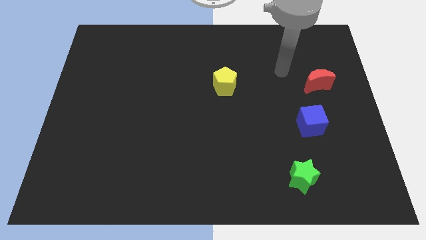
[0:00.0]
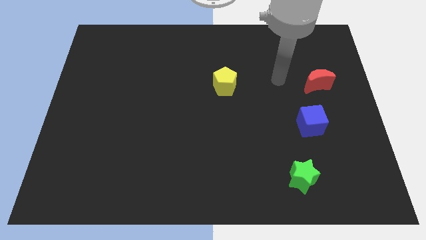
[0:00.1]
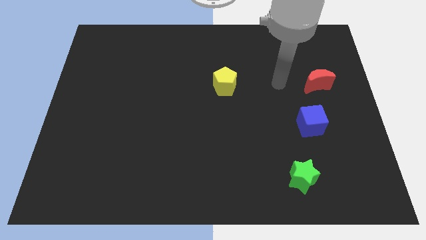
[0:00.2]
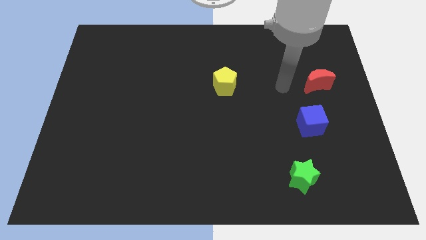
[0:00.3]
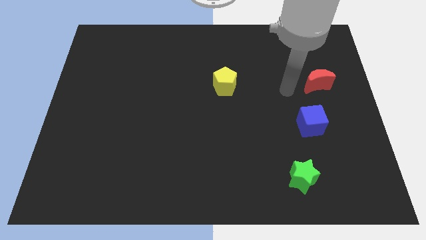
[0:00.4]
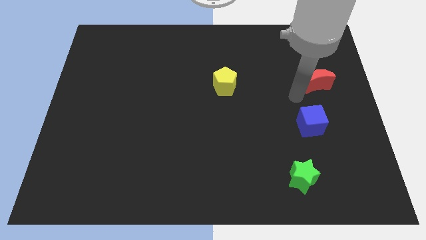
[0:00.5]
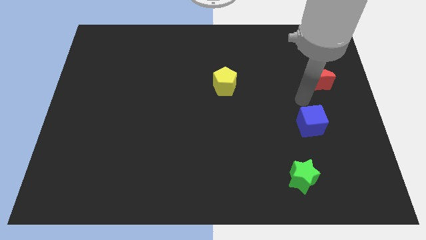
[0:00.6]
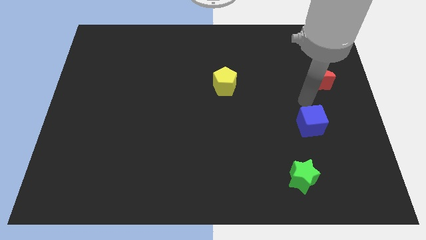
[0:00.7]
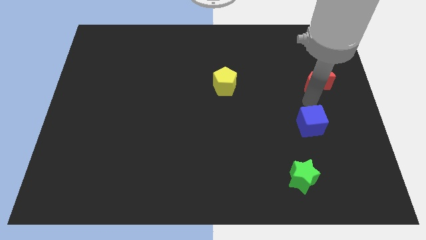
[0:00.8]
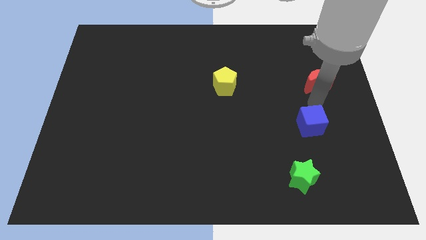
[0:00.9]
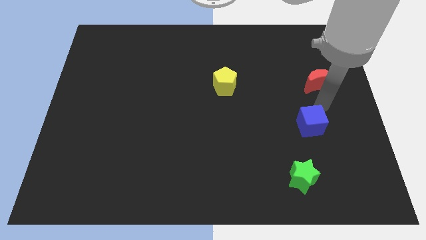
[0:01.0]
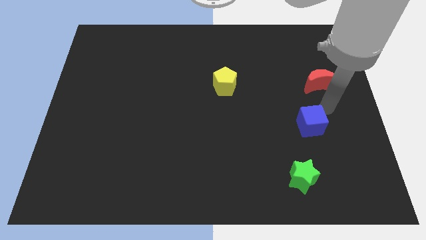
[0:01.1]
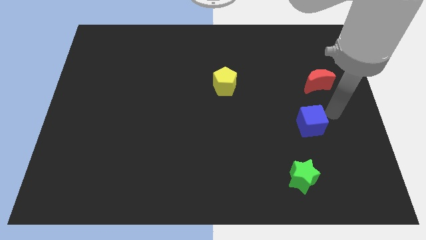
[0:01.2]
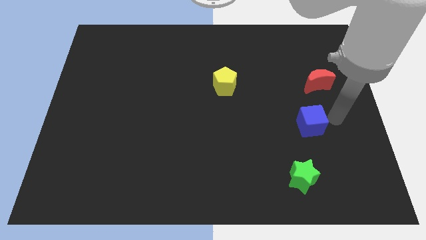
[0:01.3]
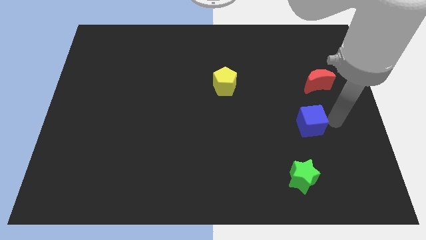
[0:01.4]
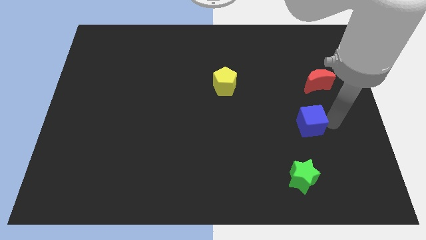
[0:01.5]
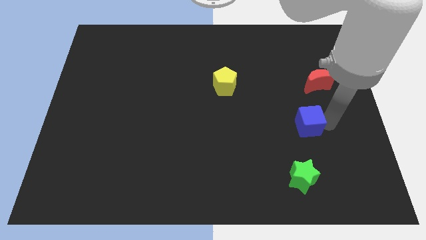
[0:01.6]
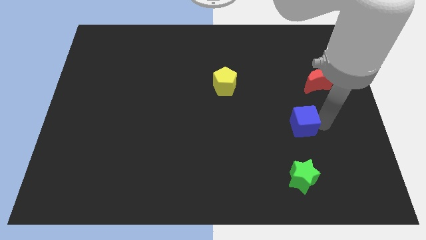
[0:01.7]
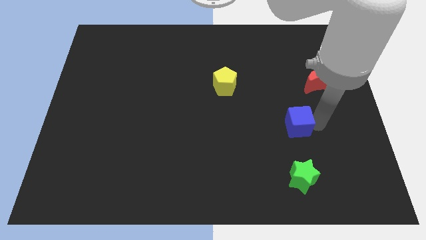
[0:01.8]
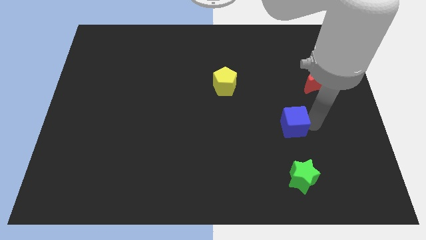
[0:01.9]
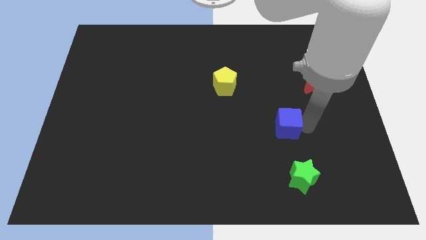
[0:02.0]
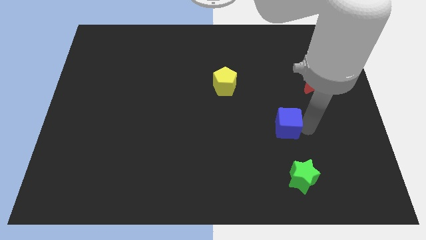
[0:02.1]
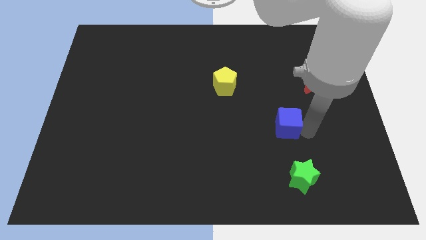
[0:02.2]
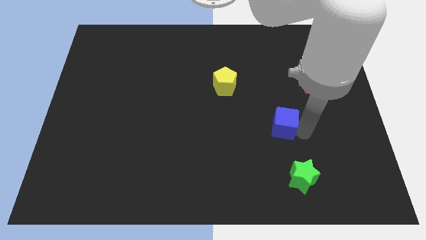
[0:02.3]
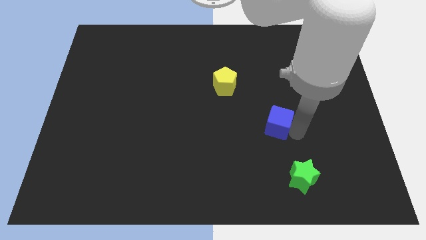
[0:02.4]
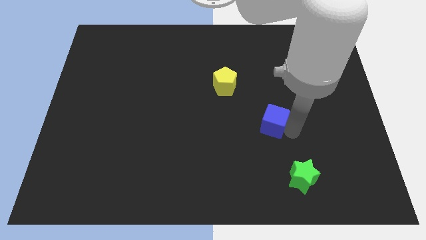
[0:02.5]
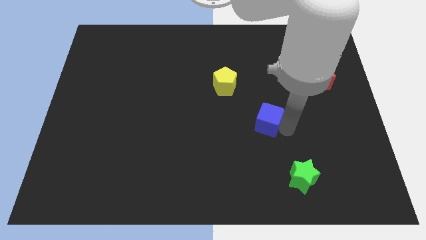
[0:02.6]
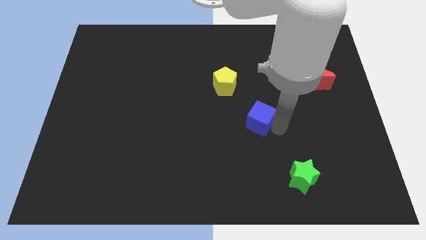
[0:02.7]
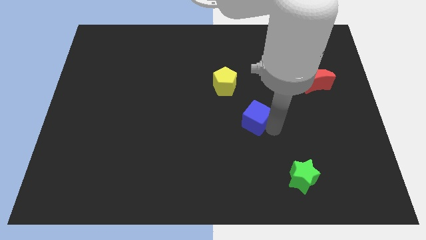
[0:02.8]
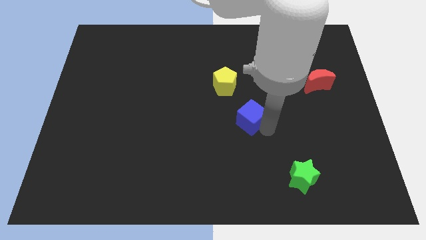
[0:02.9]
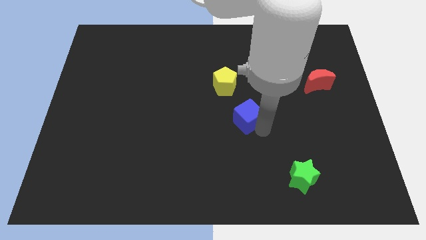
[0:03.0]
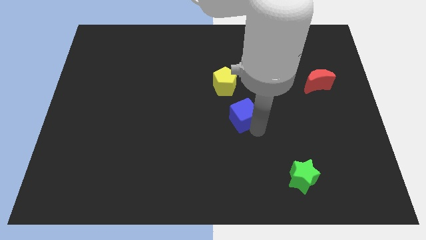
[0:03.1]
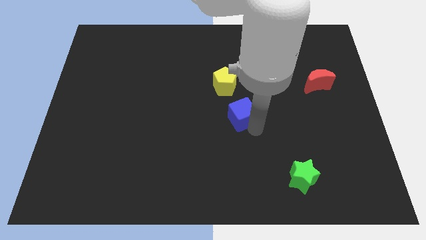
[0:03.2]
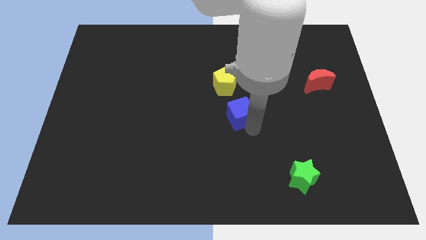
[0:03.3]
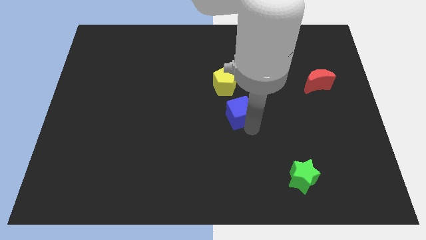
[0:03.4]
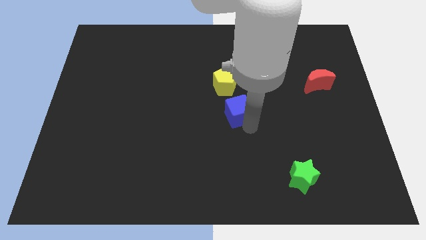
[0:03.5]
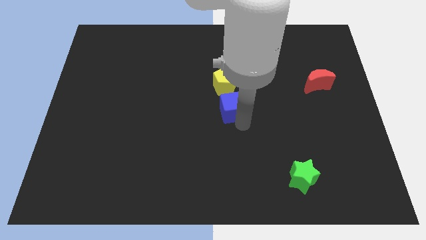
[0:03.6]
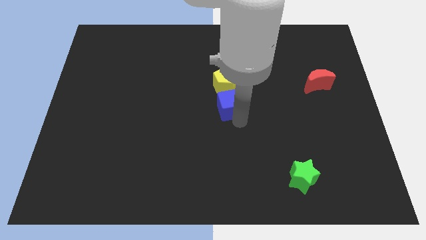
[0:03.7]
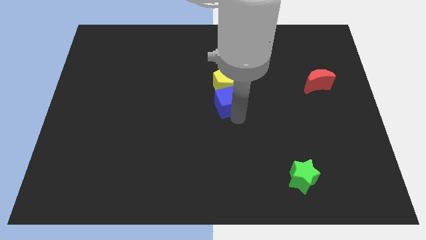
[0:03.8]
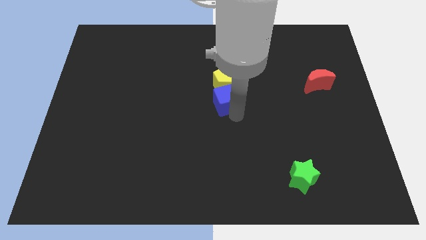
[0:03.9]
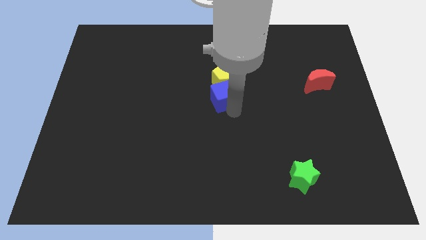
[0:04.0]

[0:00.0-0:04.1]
slide the cube close to the yellow block

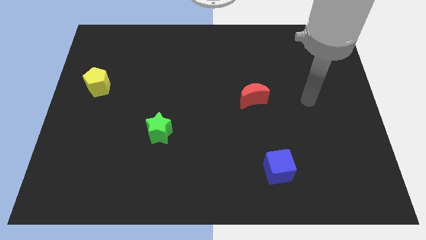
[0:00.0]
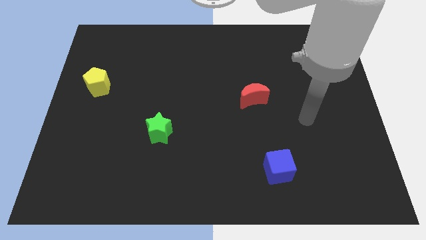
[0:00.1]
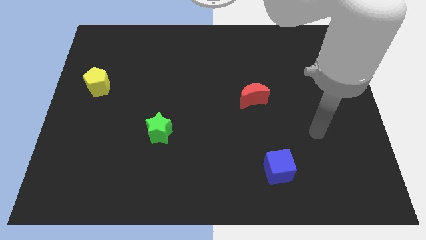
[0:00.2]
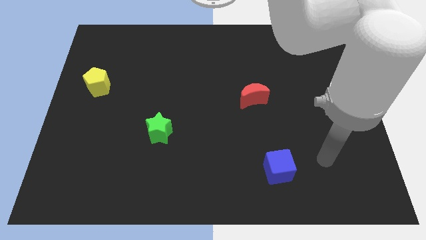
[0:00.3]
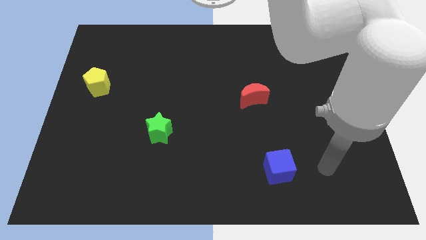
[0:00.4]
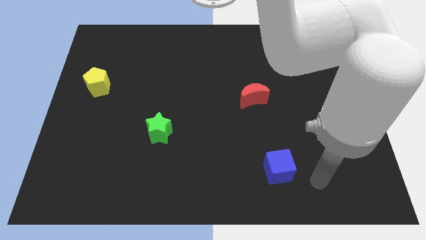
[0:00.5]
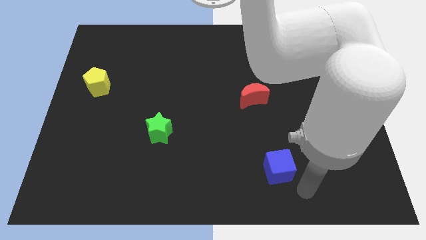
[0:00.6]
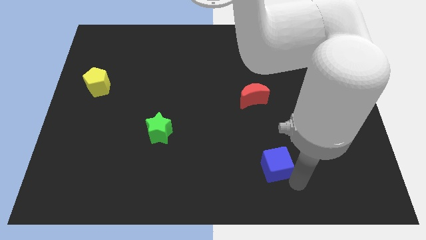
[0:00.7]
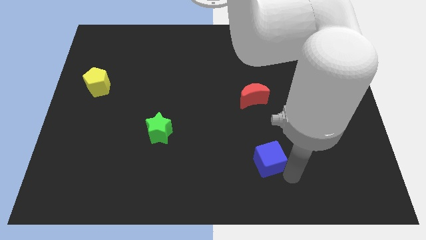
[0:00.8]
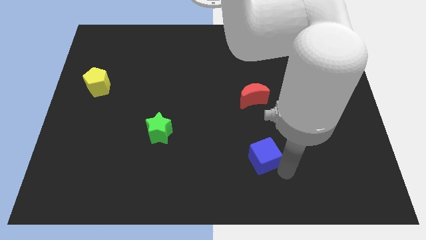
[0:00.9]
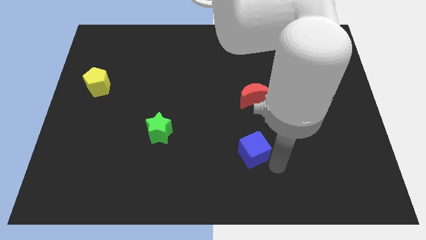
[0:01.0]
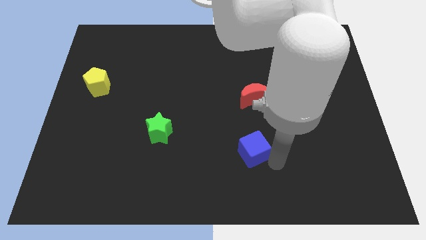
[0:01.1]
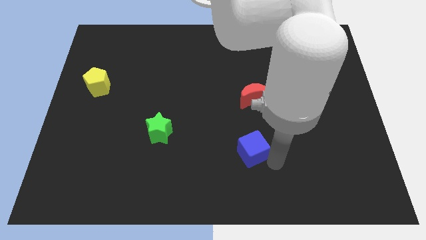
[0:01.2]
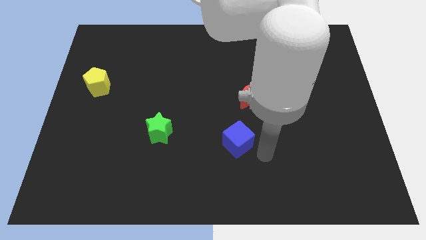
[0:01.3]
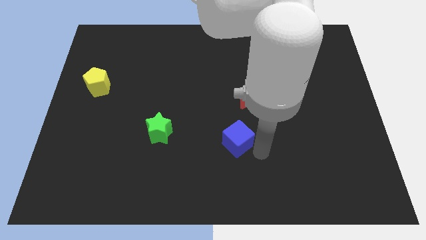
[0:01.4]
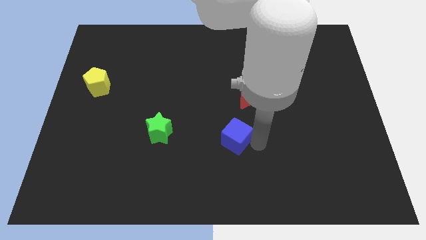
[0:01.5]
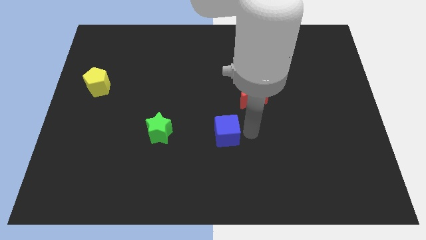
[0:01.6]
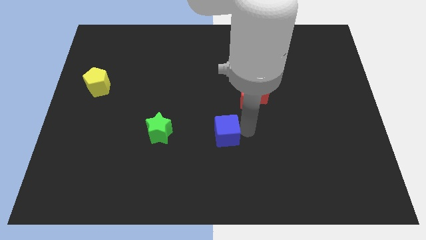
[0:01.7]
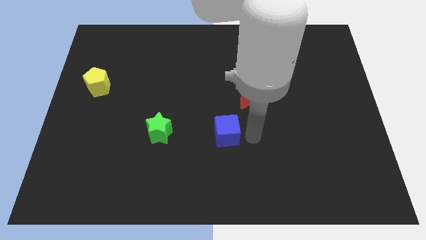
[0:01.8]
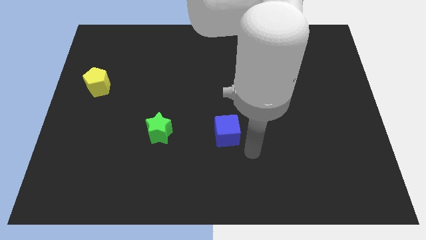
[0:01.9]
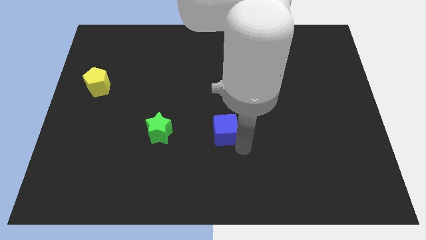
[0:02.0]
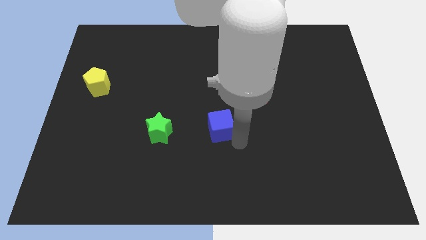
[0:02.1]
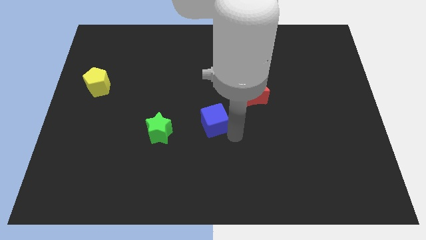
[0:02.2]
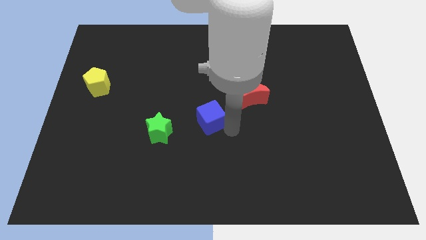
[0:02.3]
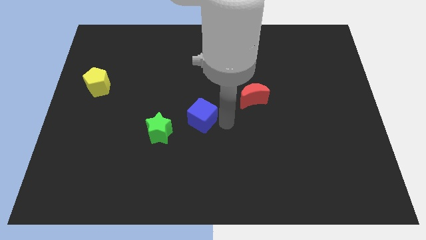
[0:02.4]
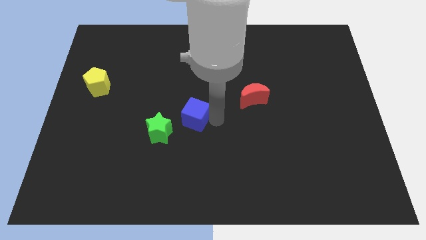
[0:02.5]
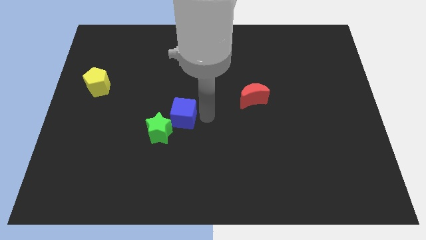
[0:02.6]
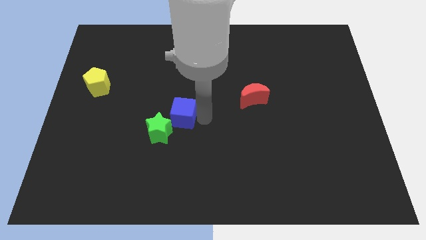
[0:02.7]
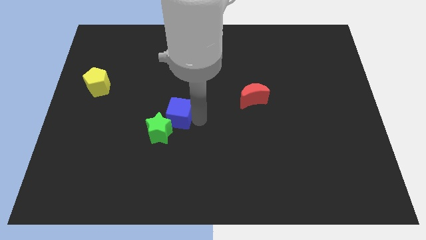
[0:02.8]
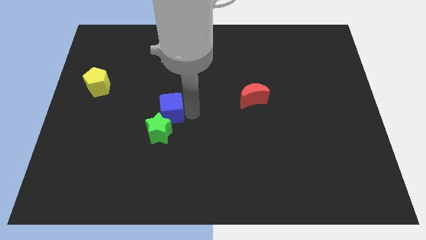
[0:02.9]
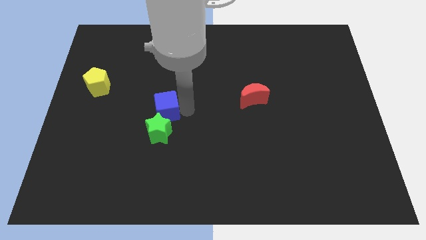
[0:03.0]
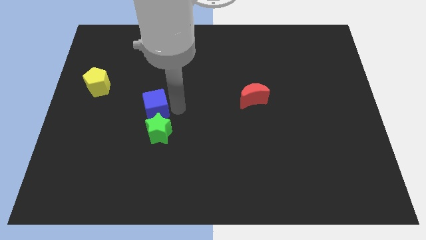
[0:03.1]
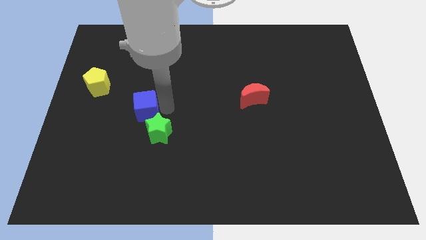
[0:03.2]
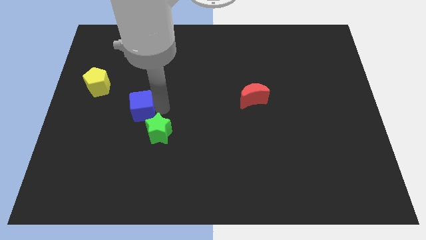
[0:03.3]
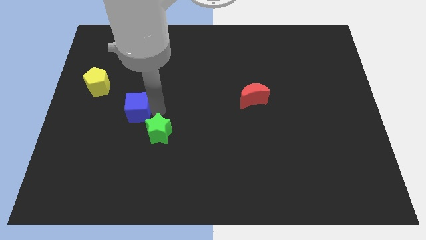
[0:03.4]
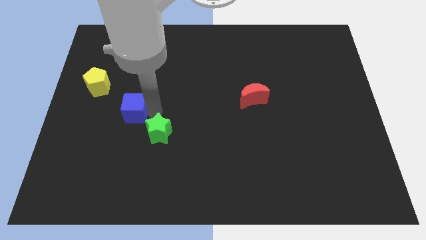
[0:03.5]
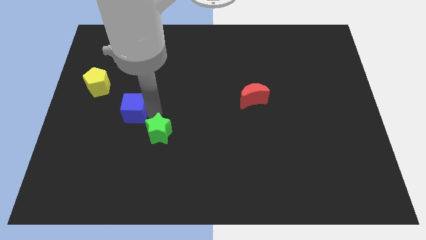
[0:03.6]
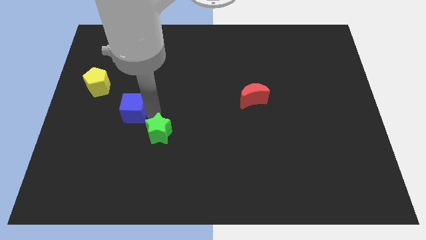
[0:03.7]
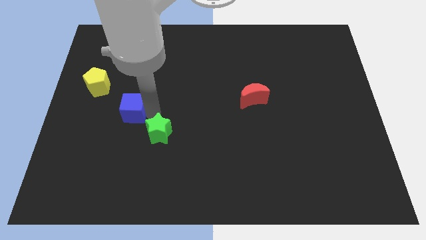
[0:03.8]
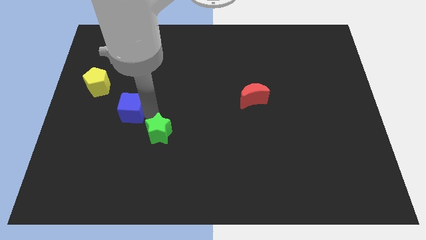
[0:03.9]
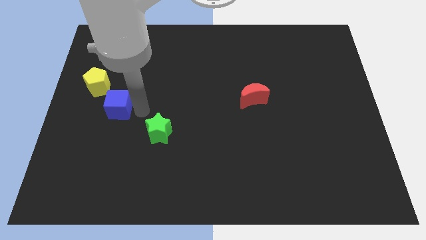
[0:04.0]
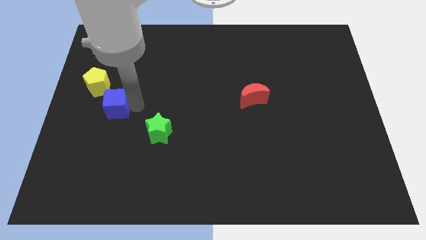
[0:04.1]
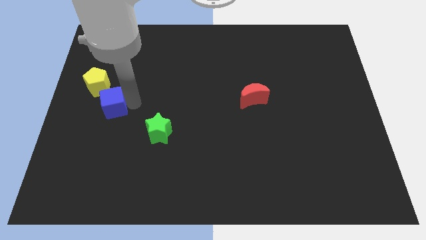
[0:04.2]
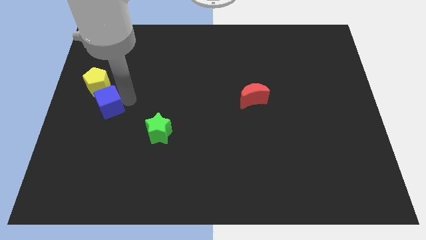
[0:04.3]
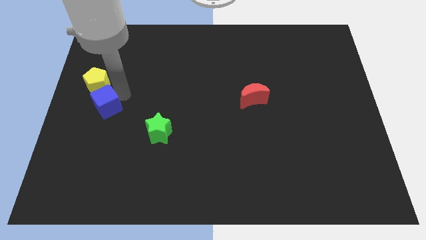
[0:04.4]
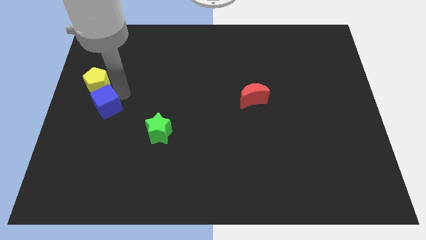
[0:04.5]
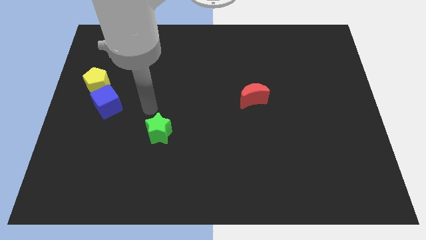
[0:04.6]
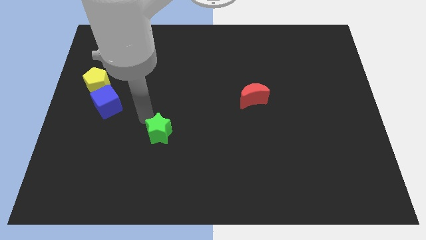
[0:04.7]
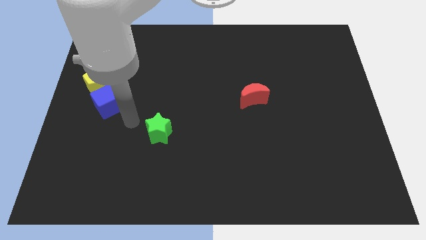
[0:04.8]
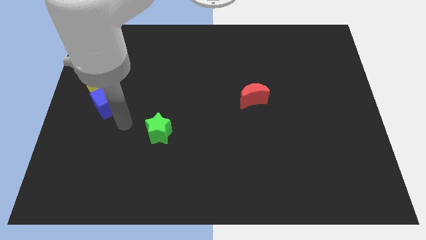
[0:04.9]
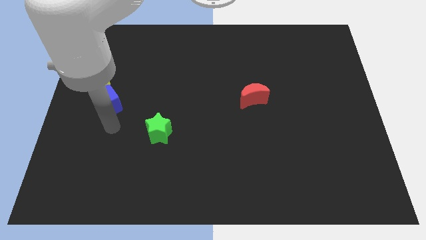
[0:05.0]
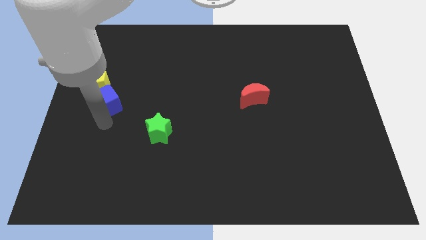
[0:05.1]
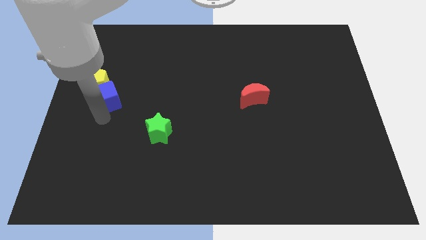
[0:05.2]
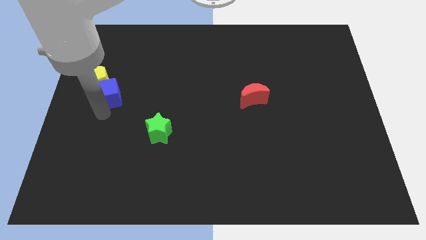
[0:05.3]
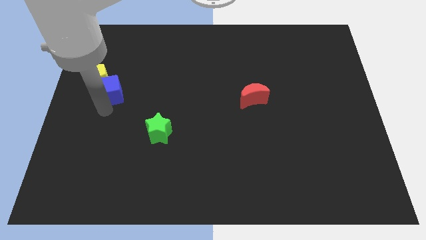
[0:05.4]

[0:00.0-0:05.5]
move the cube close to the yellow block
